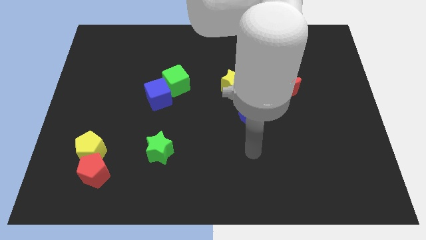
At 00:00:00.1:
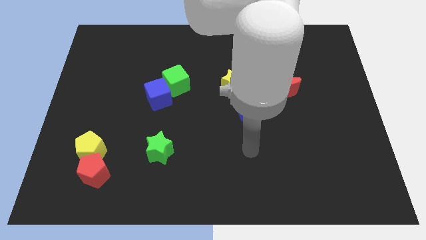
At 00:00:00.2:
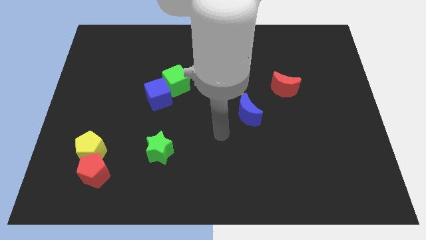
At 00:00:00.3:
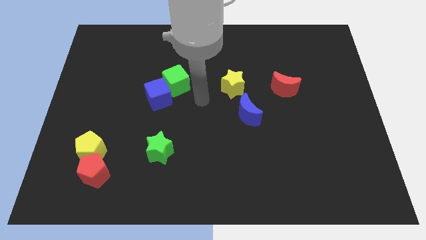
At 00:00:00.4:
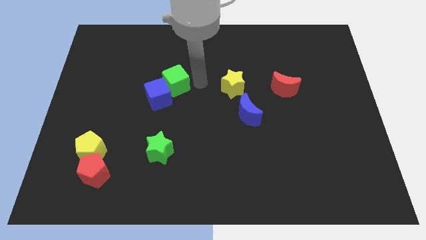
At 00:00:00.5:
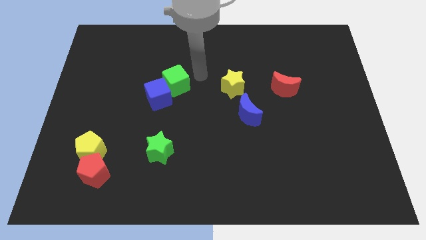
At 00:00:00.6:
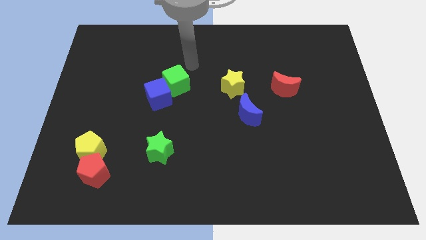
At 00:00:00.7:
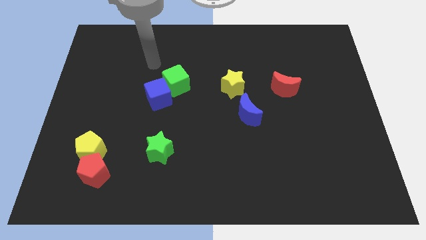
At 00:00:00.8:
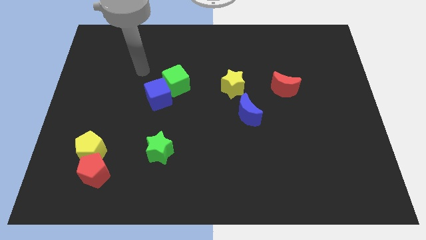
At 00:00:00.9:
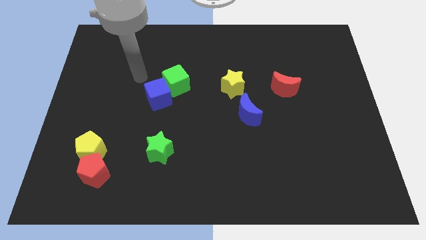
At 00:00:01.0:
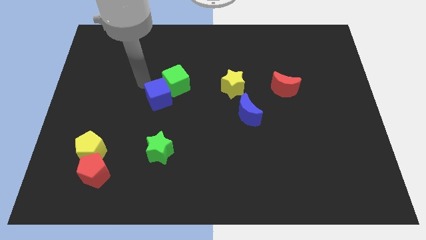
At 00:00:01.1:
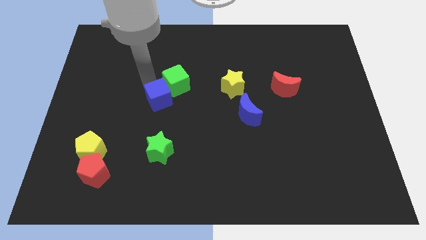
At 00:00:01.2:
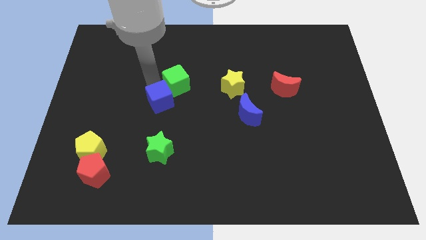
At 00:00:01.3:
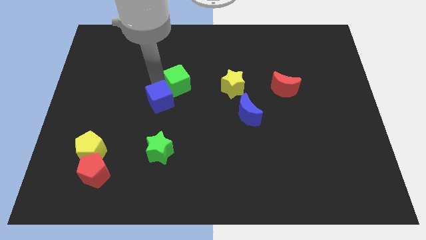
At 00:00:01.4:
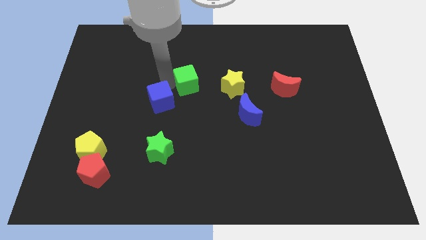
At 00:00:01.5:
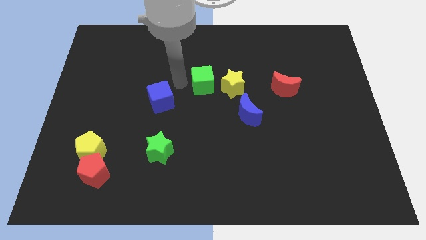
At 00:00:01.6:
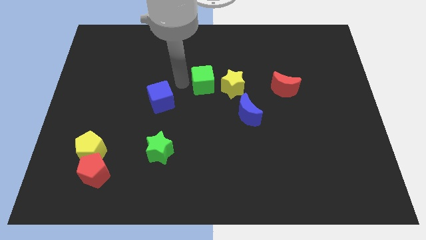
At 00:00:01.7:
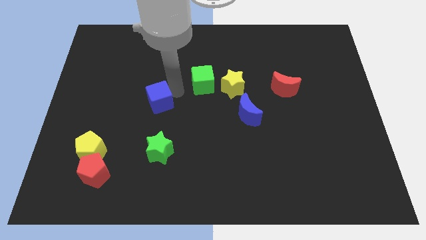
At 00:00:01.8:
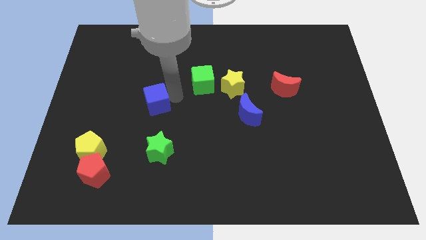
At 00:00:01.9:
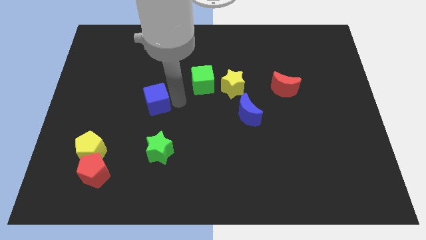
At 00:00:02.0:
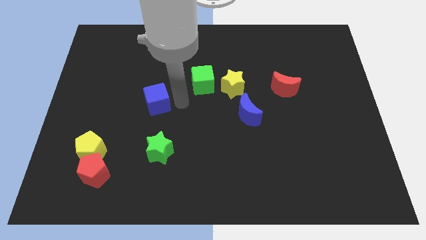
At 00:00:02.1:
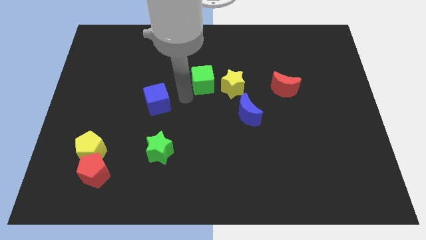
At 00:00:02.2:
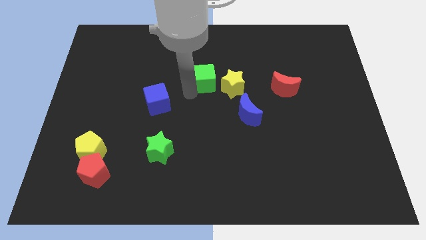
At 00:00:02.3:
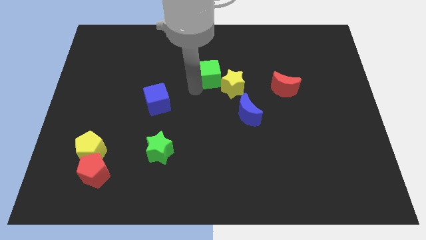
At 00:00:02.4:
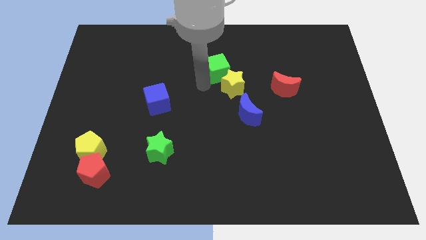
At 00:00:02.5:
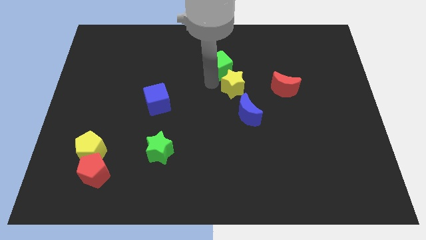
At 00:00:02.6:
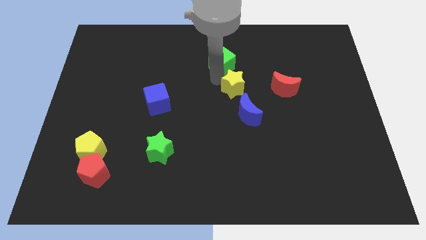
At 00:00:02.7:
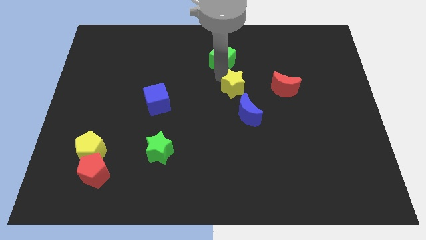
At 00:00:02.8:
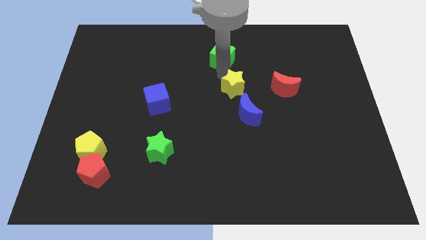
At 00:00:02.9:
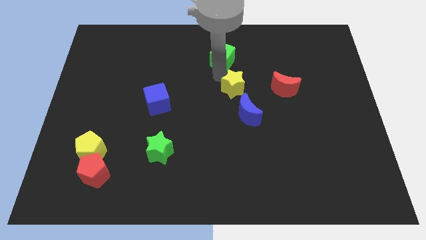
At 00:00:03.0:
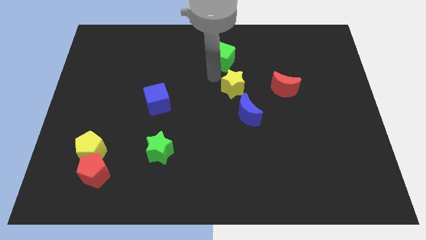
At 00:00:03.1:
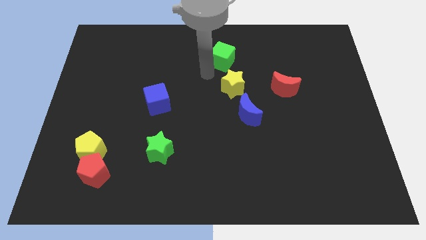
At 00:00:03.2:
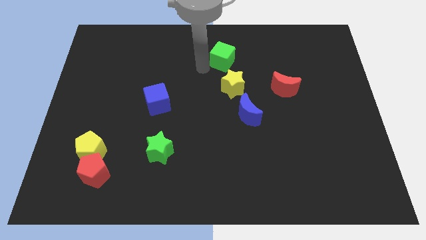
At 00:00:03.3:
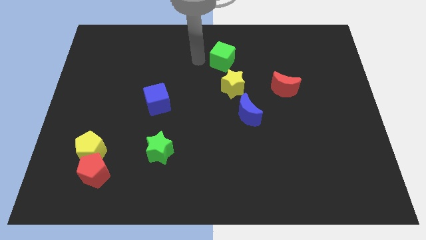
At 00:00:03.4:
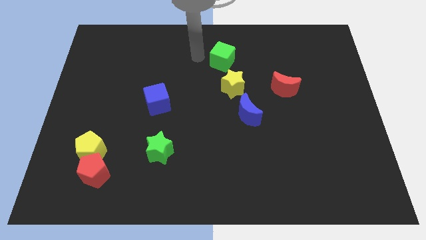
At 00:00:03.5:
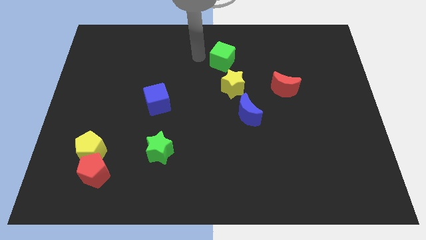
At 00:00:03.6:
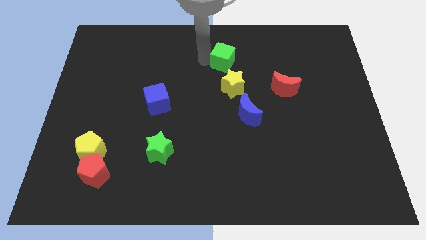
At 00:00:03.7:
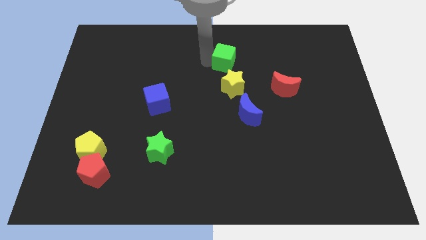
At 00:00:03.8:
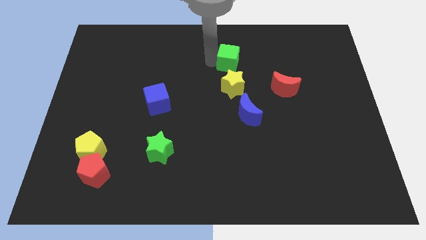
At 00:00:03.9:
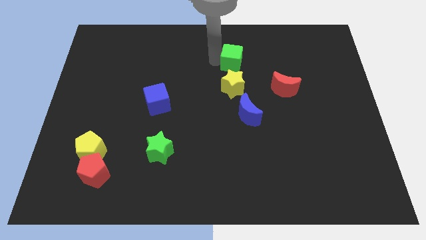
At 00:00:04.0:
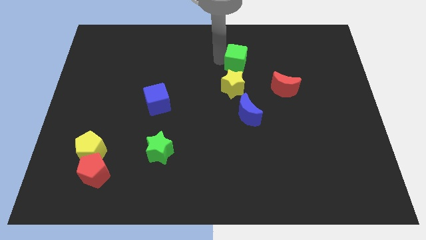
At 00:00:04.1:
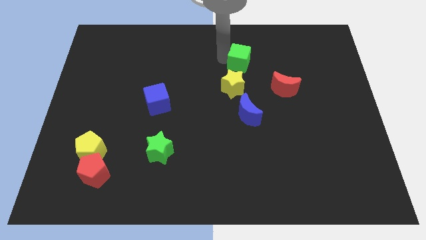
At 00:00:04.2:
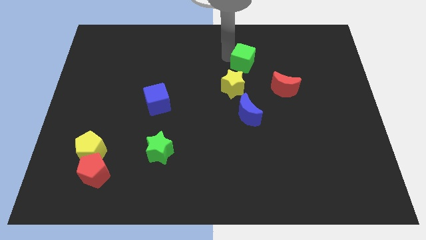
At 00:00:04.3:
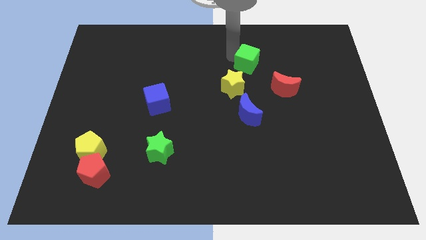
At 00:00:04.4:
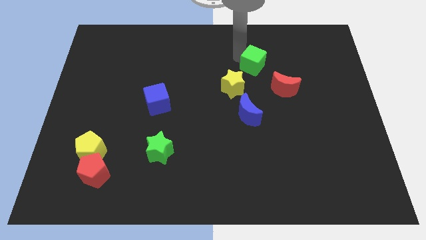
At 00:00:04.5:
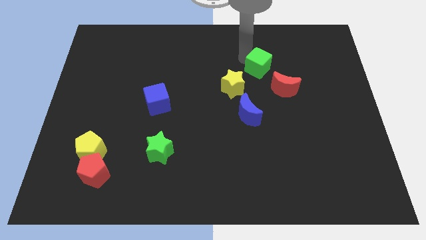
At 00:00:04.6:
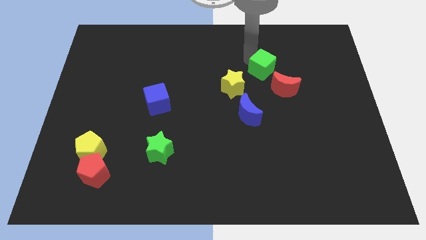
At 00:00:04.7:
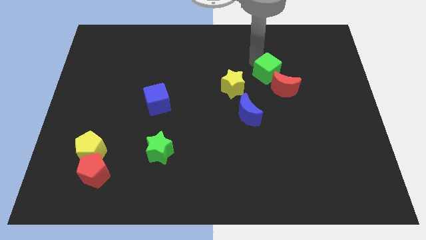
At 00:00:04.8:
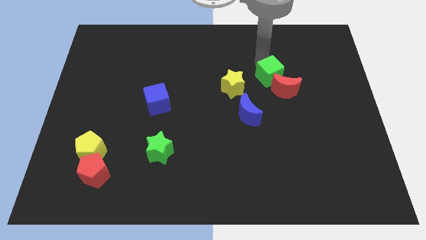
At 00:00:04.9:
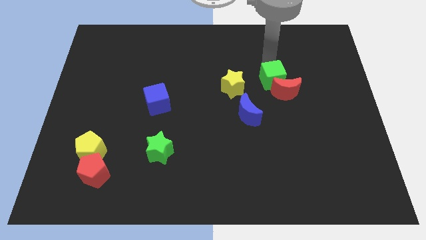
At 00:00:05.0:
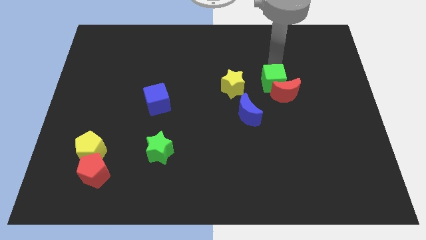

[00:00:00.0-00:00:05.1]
push the green cube towards the red moon

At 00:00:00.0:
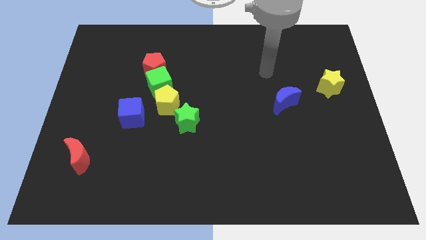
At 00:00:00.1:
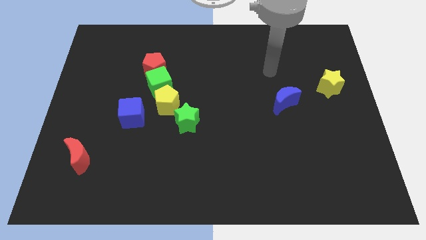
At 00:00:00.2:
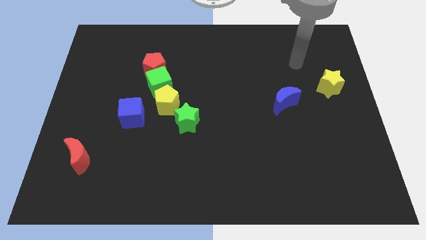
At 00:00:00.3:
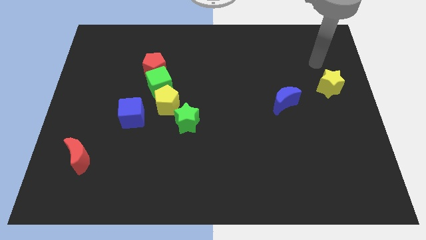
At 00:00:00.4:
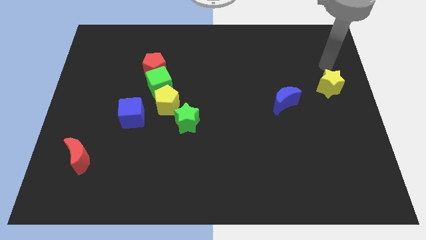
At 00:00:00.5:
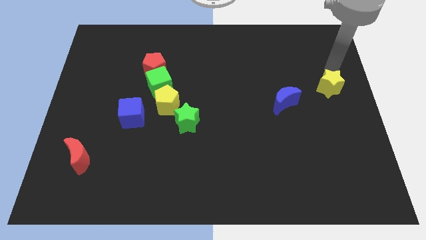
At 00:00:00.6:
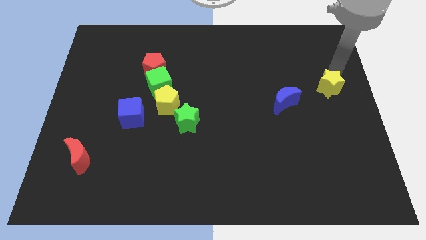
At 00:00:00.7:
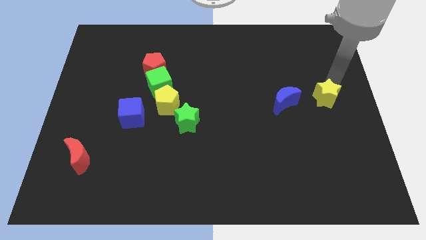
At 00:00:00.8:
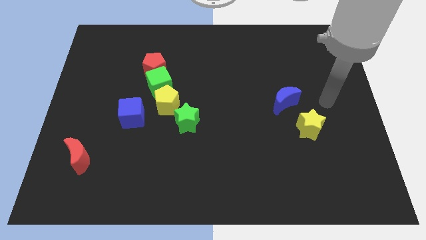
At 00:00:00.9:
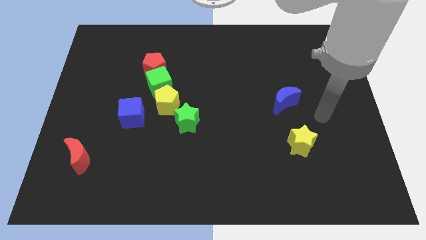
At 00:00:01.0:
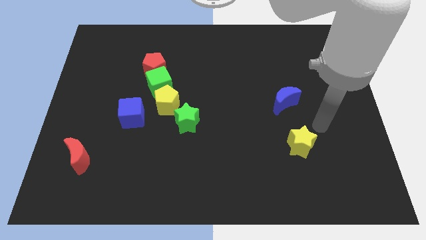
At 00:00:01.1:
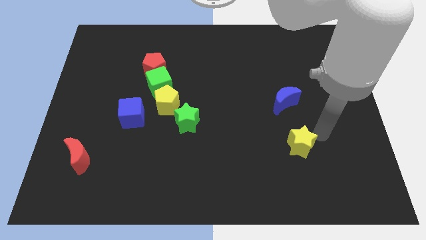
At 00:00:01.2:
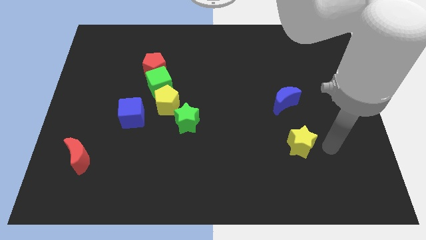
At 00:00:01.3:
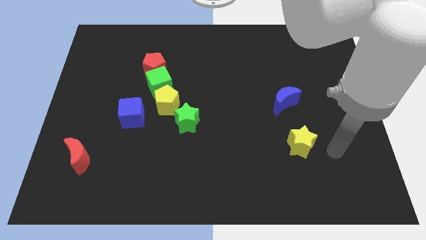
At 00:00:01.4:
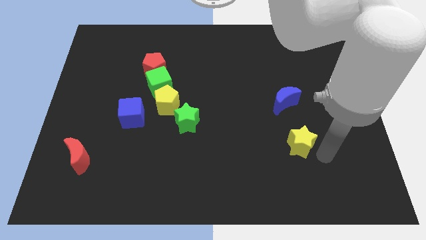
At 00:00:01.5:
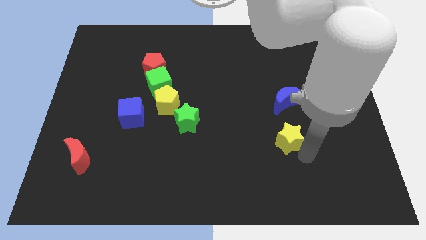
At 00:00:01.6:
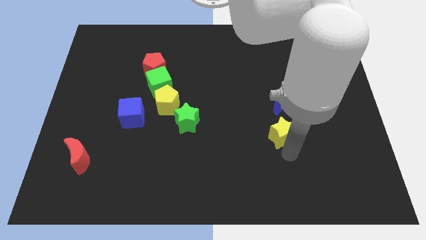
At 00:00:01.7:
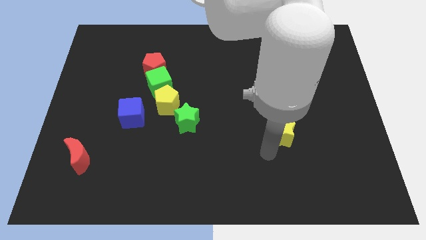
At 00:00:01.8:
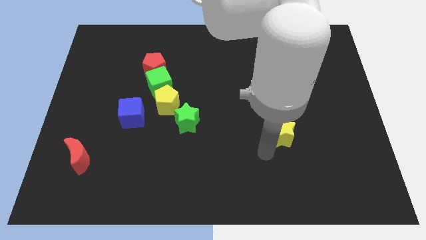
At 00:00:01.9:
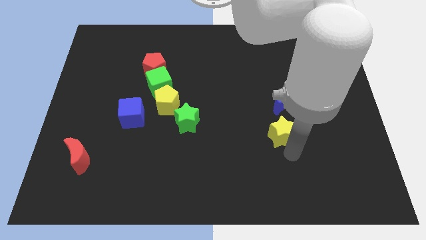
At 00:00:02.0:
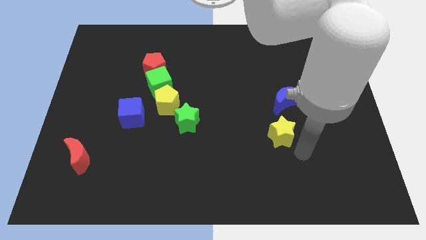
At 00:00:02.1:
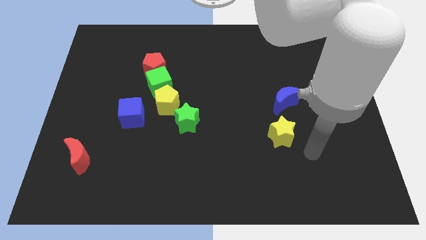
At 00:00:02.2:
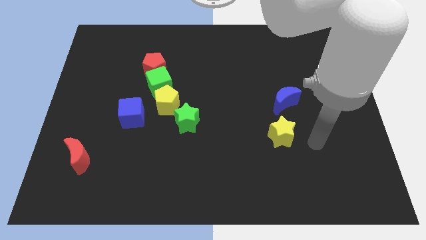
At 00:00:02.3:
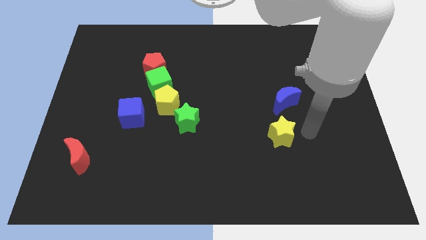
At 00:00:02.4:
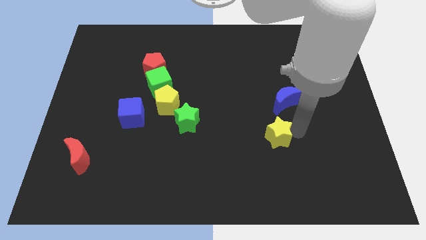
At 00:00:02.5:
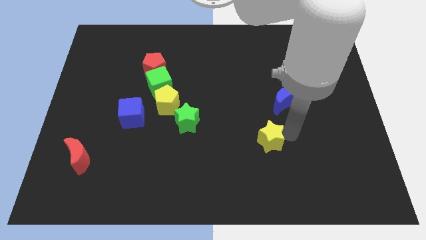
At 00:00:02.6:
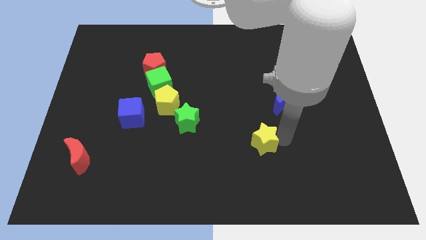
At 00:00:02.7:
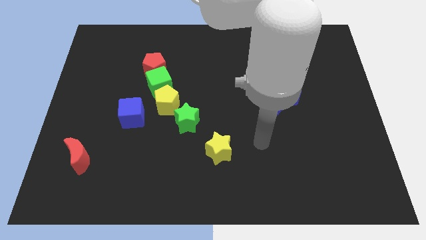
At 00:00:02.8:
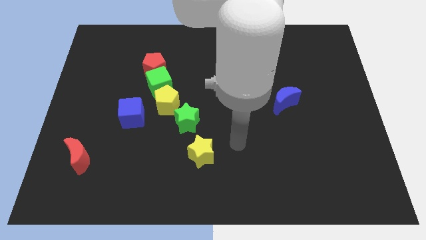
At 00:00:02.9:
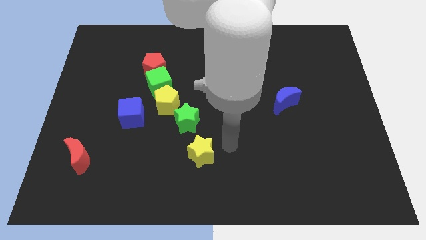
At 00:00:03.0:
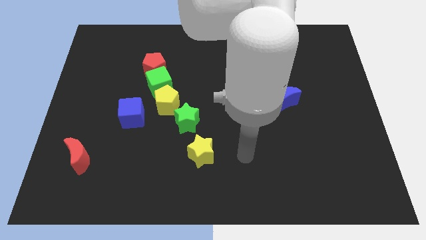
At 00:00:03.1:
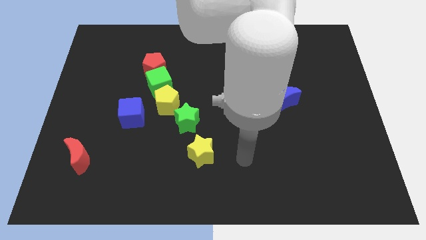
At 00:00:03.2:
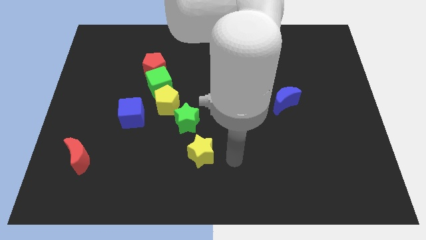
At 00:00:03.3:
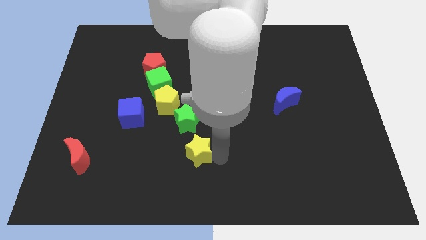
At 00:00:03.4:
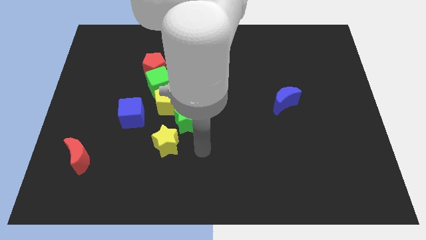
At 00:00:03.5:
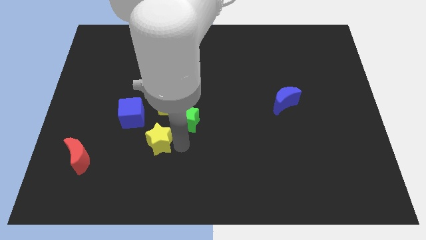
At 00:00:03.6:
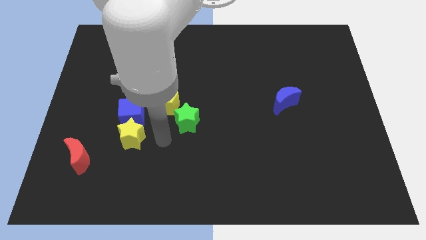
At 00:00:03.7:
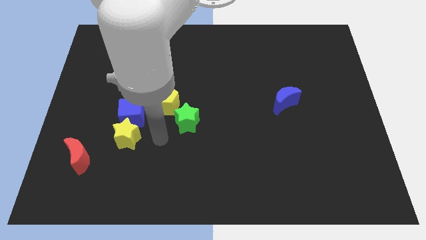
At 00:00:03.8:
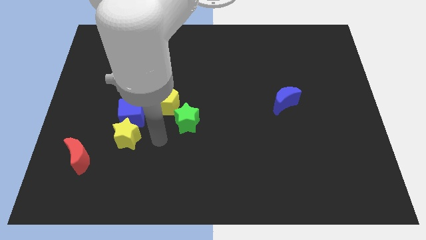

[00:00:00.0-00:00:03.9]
put the yellow star towards the blue cube
